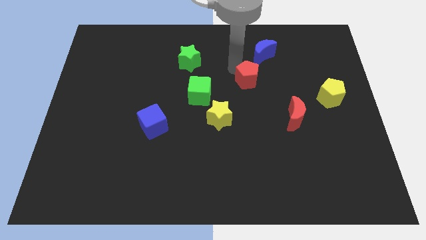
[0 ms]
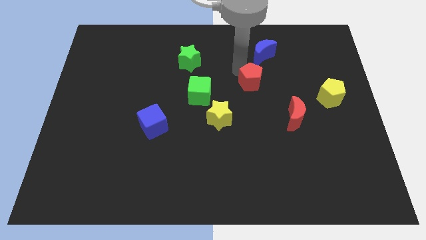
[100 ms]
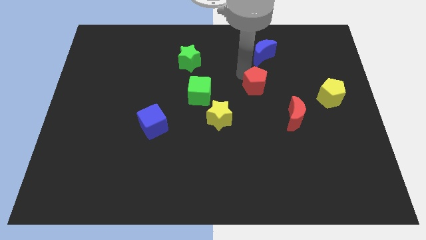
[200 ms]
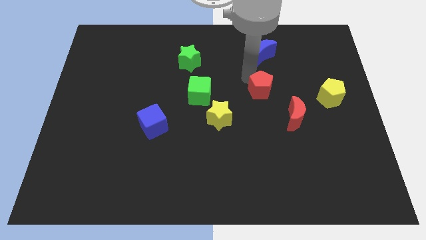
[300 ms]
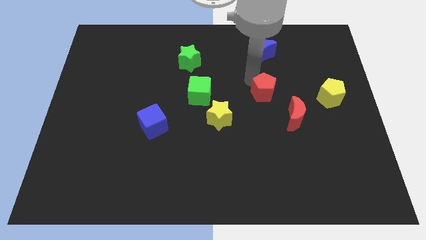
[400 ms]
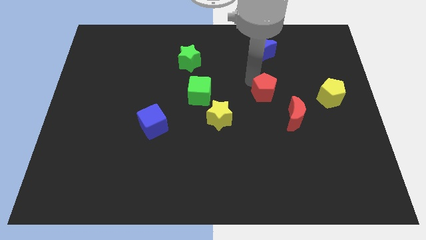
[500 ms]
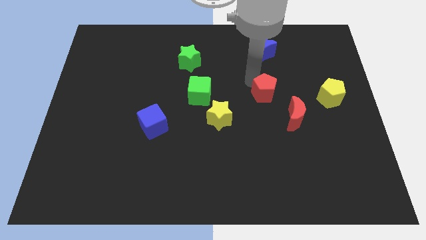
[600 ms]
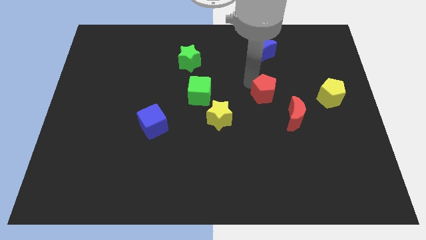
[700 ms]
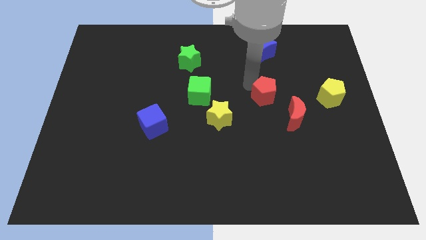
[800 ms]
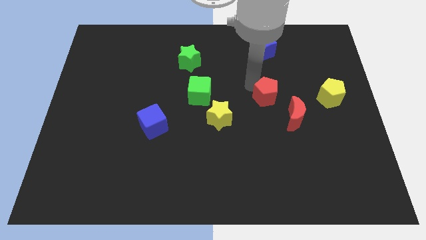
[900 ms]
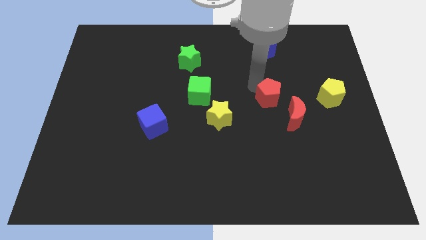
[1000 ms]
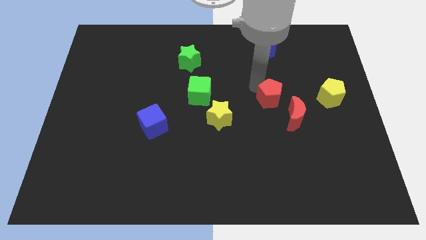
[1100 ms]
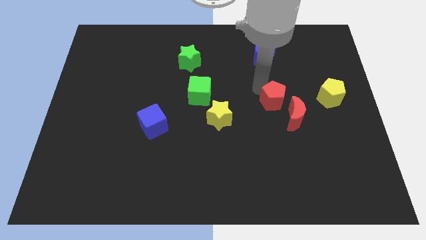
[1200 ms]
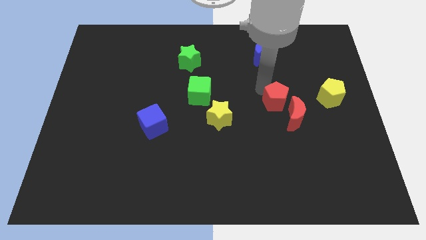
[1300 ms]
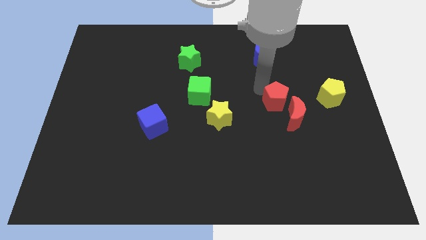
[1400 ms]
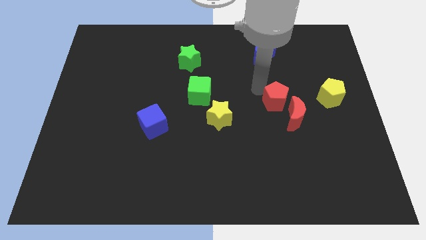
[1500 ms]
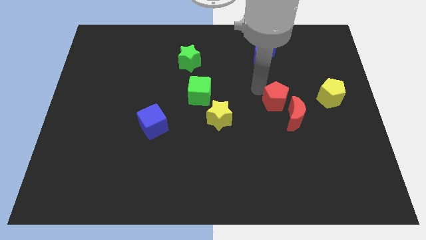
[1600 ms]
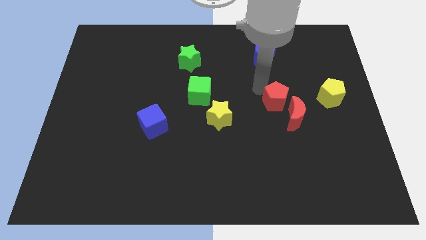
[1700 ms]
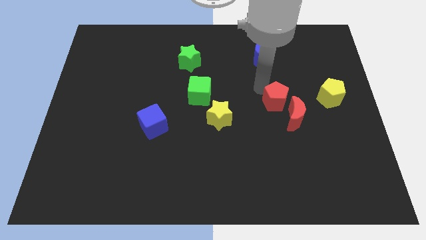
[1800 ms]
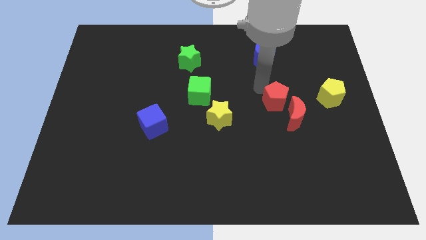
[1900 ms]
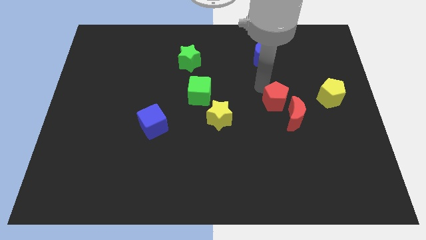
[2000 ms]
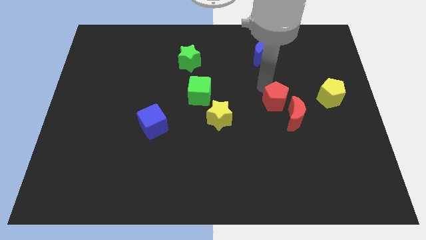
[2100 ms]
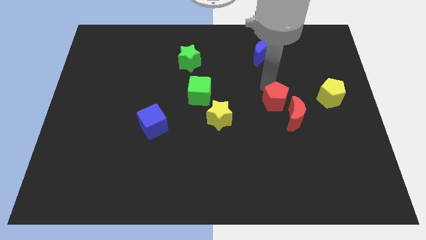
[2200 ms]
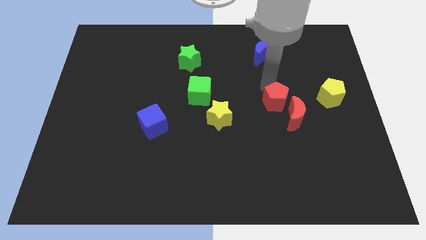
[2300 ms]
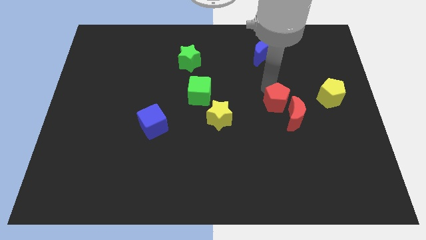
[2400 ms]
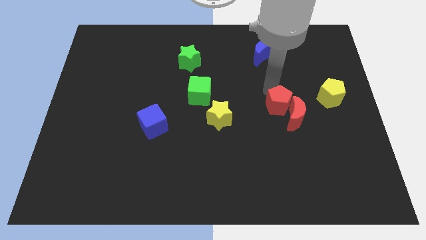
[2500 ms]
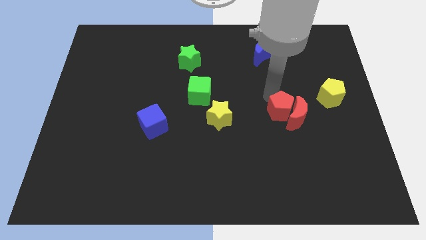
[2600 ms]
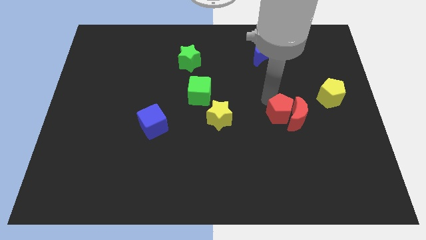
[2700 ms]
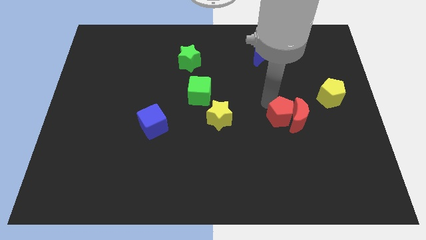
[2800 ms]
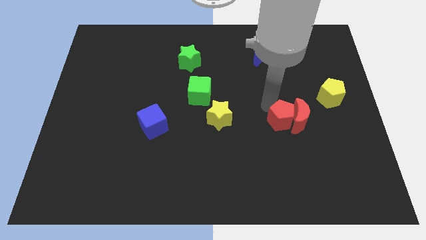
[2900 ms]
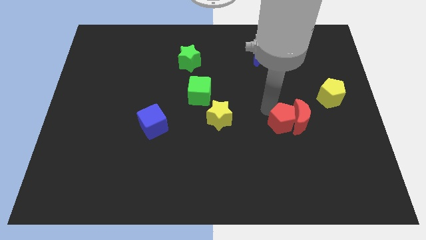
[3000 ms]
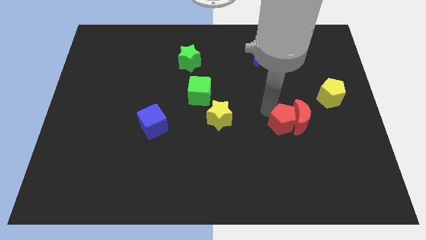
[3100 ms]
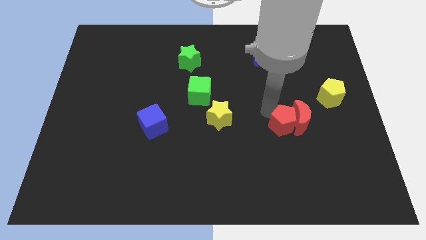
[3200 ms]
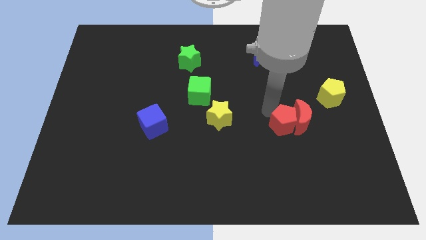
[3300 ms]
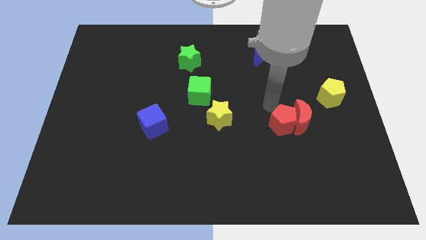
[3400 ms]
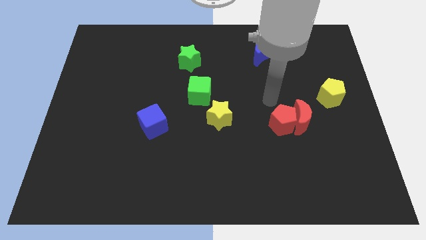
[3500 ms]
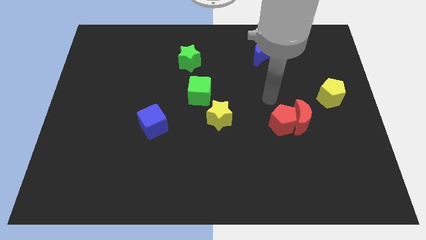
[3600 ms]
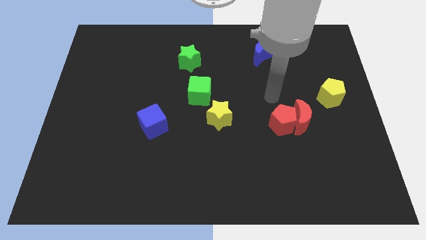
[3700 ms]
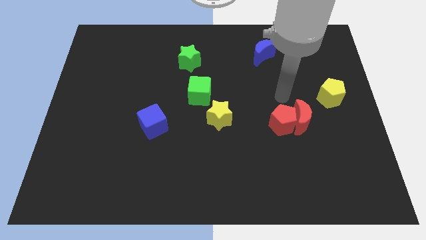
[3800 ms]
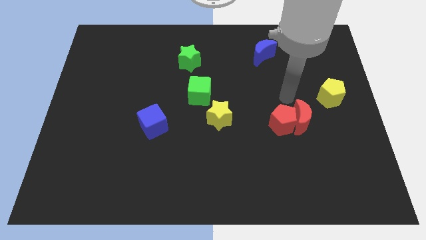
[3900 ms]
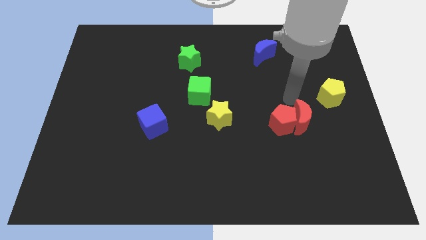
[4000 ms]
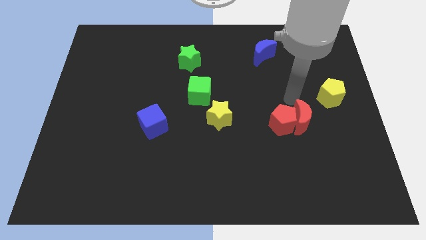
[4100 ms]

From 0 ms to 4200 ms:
place red pentagon left to the red crescent

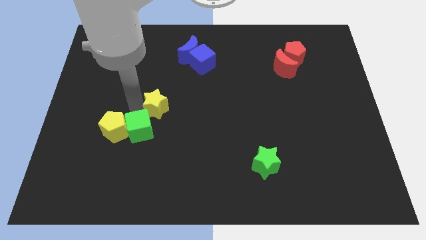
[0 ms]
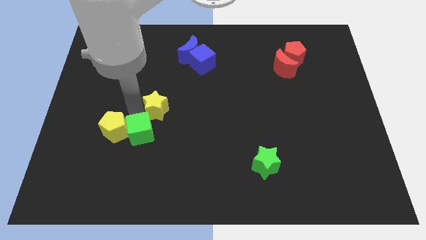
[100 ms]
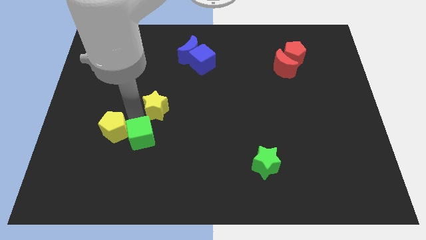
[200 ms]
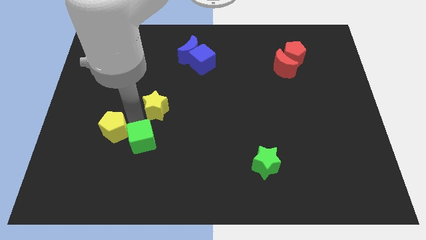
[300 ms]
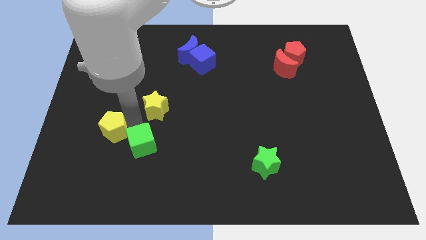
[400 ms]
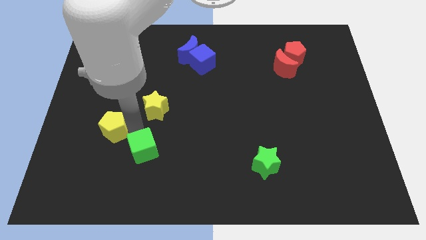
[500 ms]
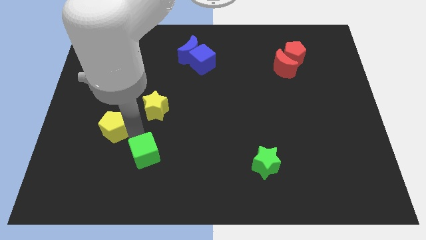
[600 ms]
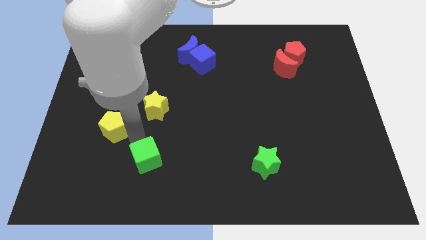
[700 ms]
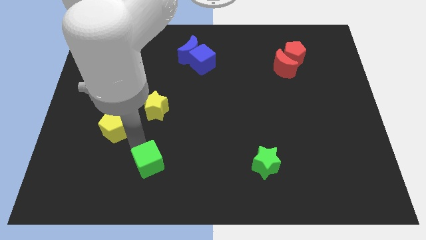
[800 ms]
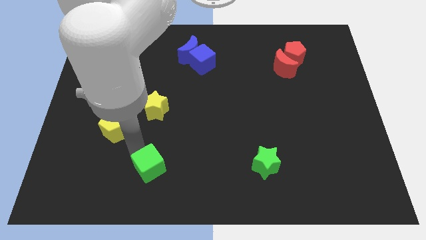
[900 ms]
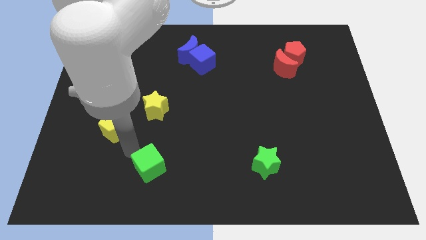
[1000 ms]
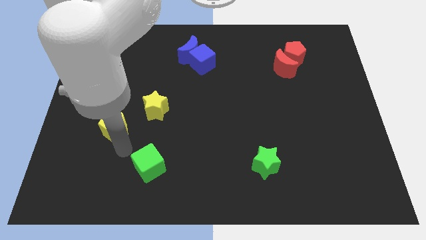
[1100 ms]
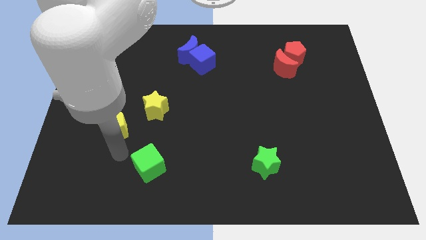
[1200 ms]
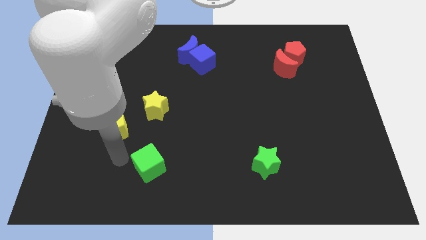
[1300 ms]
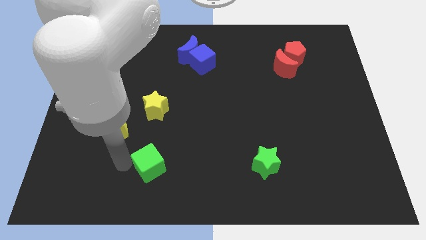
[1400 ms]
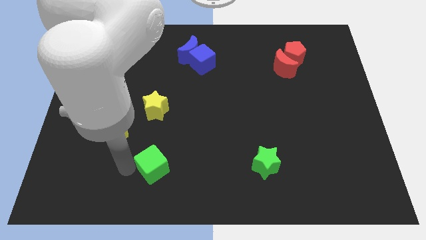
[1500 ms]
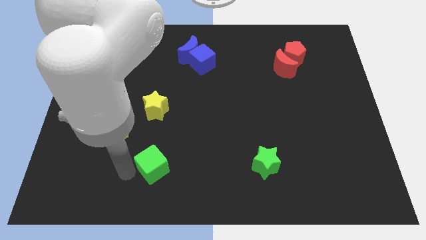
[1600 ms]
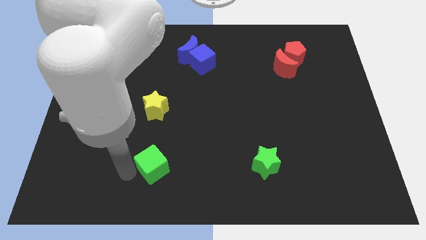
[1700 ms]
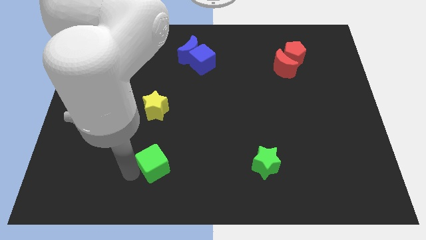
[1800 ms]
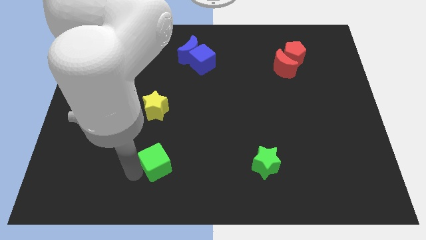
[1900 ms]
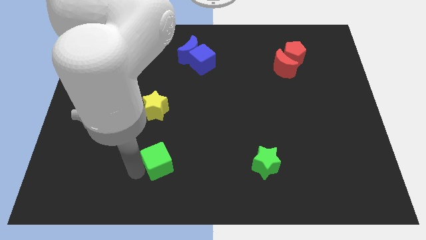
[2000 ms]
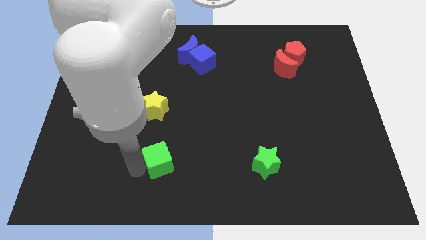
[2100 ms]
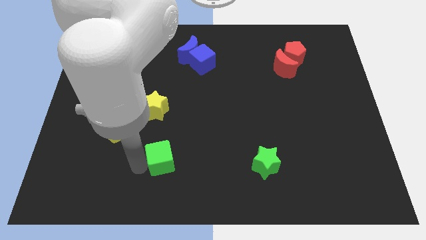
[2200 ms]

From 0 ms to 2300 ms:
move green cube towards bottom

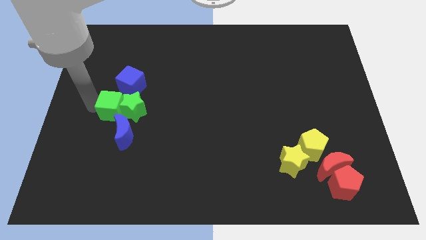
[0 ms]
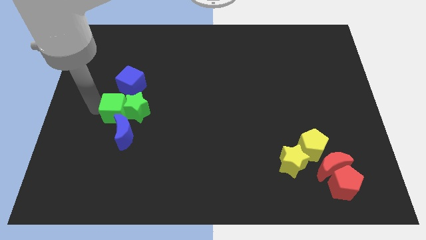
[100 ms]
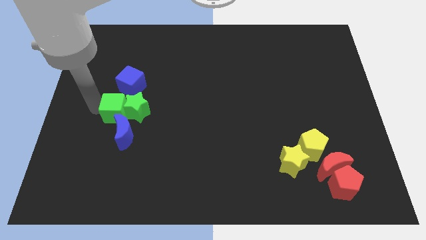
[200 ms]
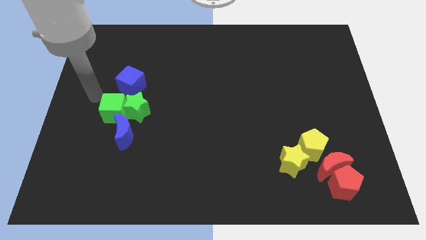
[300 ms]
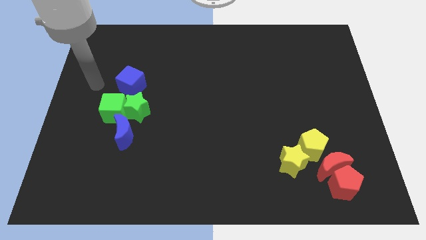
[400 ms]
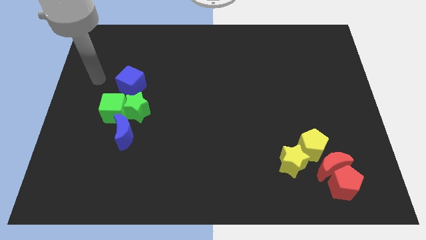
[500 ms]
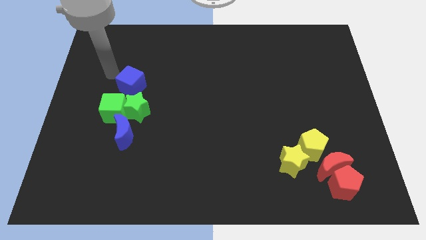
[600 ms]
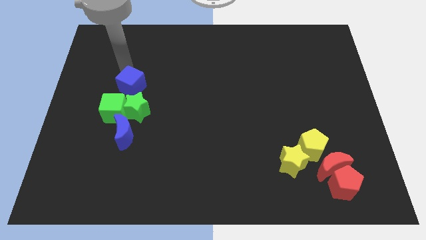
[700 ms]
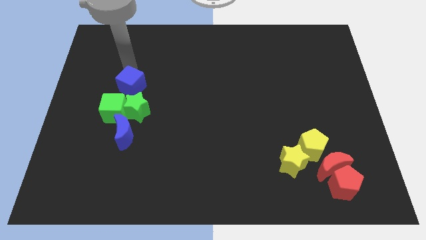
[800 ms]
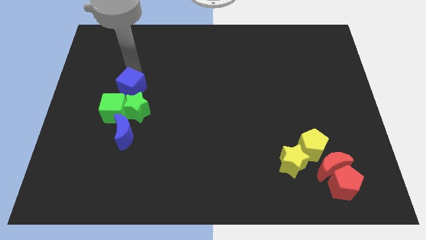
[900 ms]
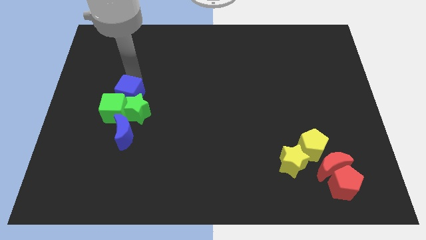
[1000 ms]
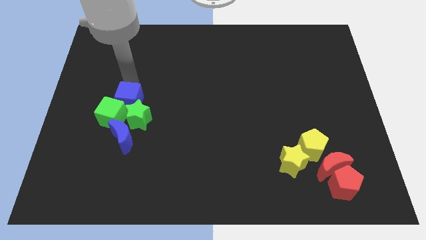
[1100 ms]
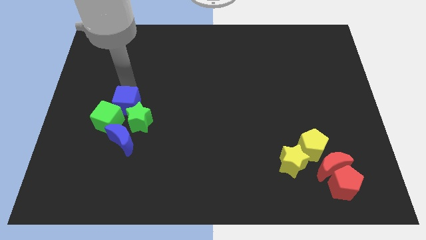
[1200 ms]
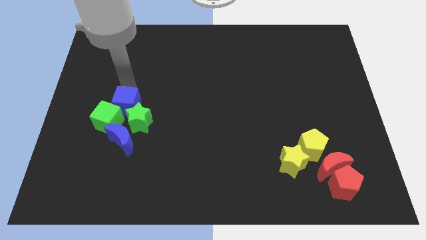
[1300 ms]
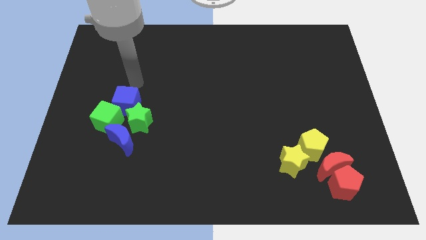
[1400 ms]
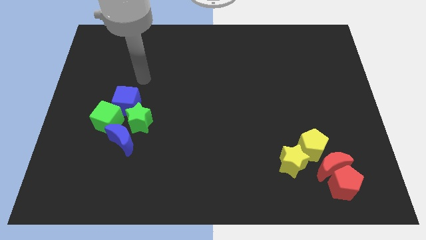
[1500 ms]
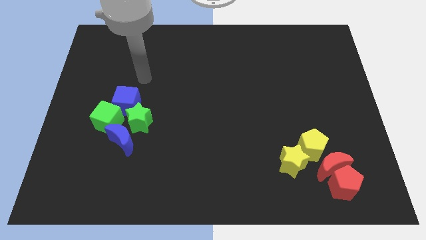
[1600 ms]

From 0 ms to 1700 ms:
place the arm towards the top of the blue moon

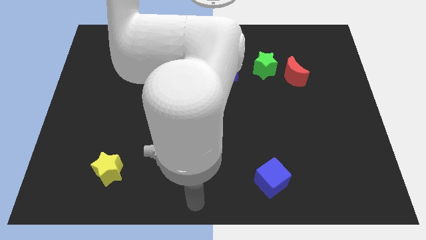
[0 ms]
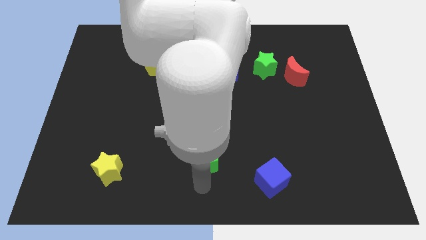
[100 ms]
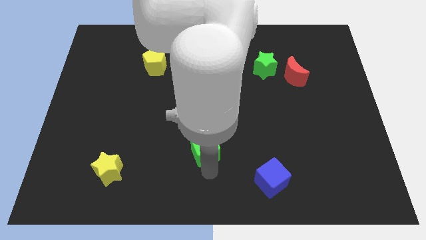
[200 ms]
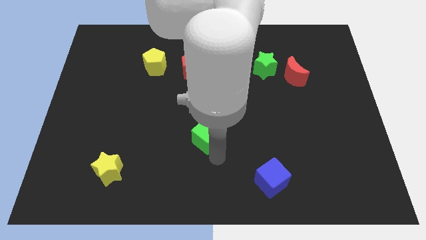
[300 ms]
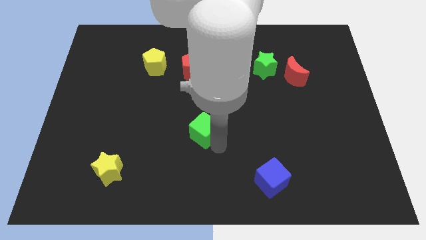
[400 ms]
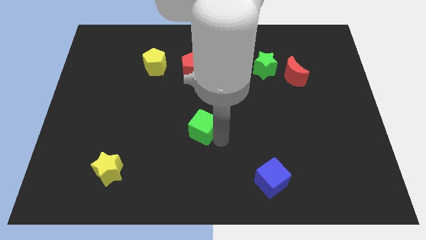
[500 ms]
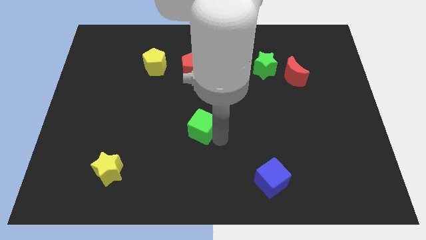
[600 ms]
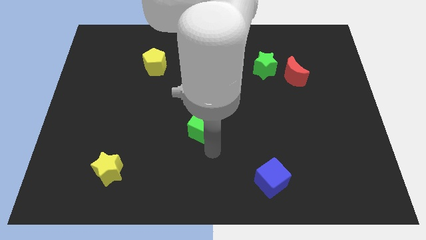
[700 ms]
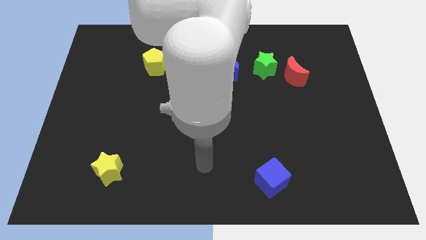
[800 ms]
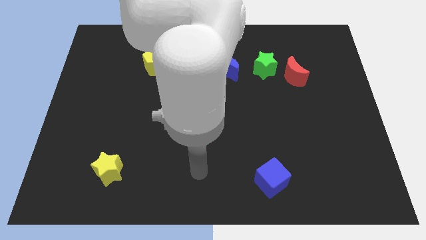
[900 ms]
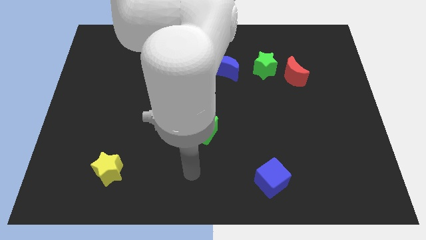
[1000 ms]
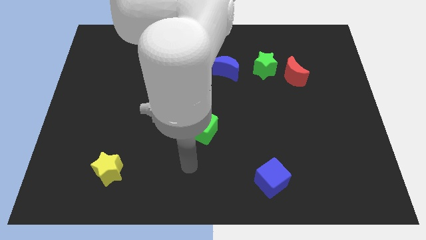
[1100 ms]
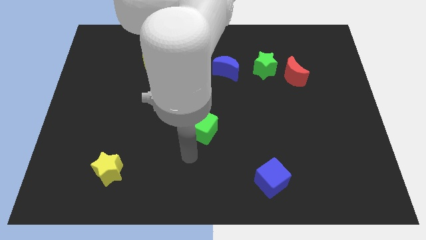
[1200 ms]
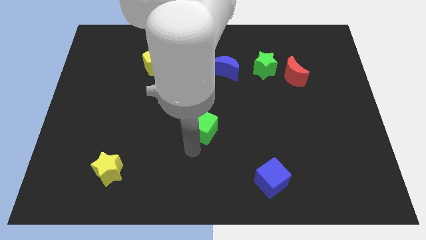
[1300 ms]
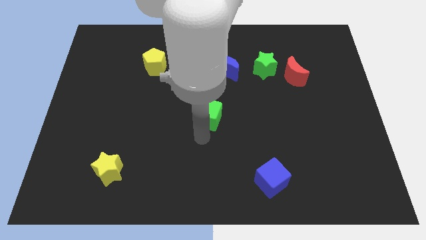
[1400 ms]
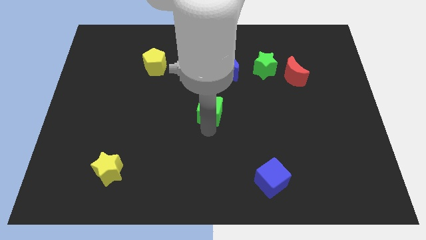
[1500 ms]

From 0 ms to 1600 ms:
place the green cube at the center of the board
